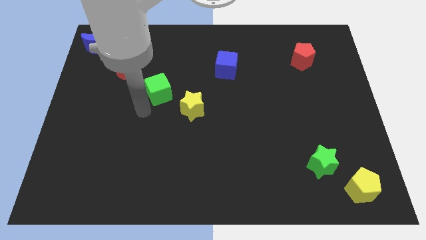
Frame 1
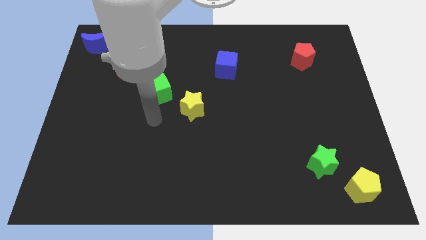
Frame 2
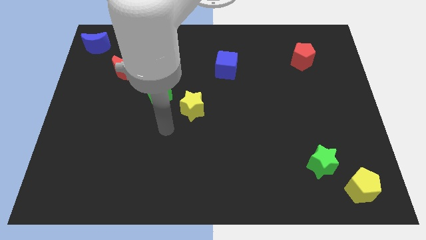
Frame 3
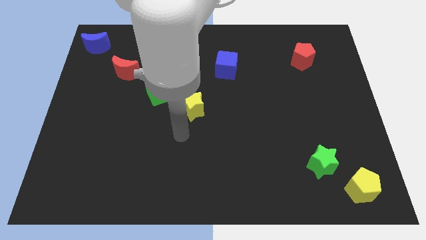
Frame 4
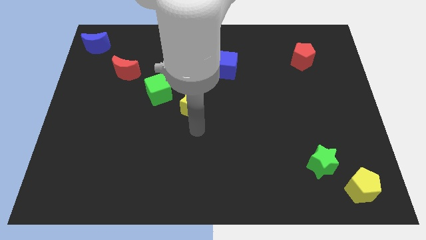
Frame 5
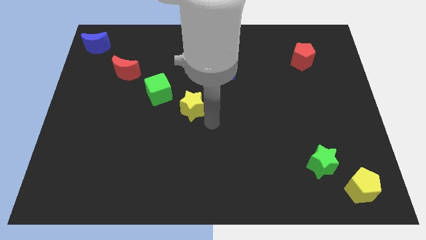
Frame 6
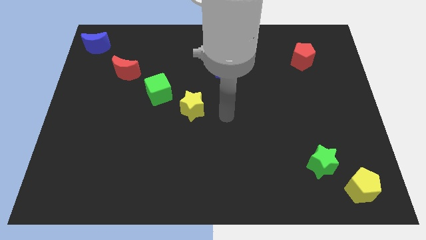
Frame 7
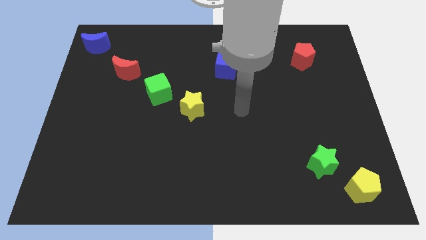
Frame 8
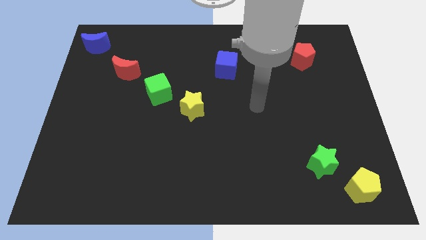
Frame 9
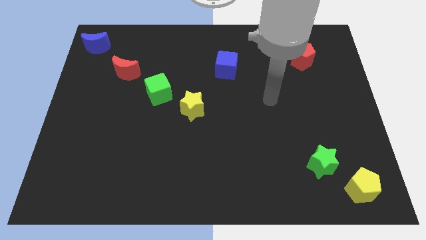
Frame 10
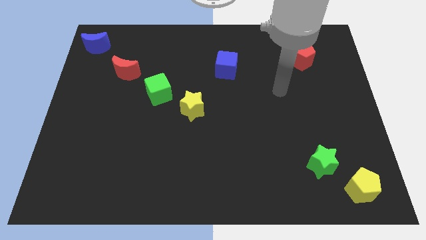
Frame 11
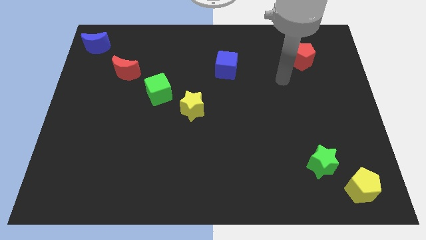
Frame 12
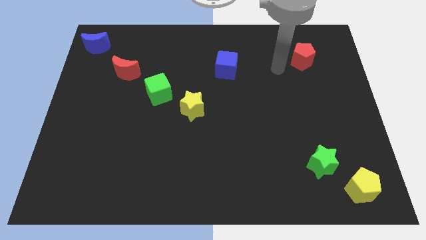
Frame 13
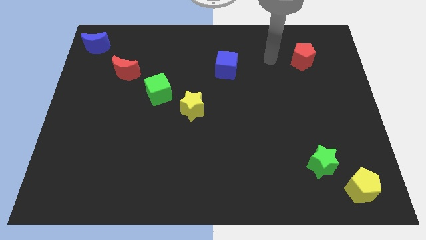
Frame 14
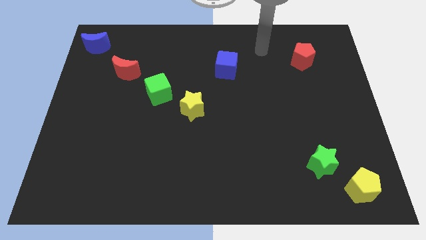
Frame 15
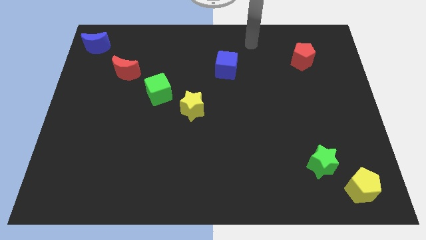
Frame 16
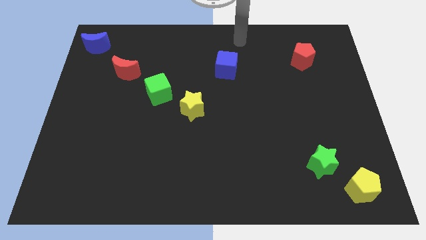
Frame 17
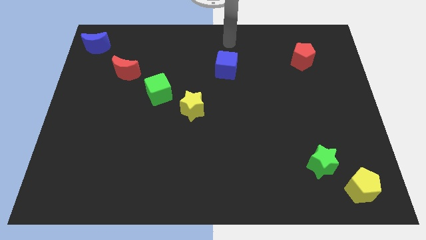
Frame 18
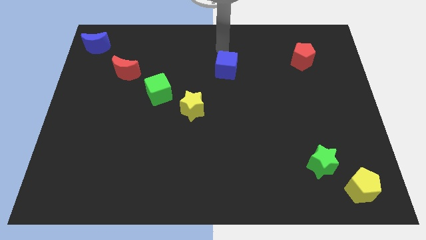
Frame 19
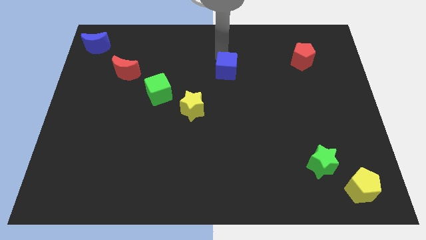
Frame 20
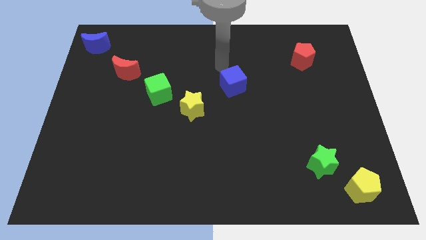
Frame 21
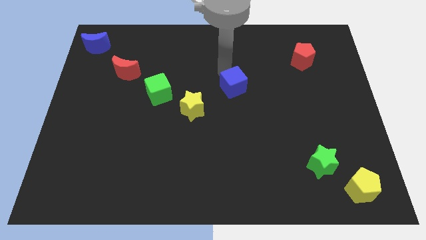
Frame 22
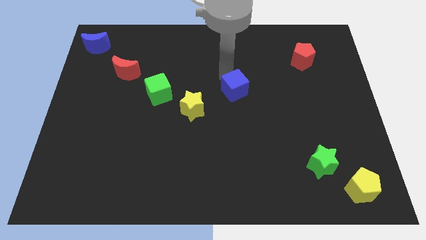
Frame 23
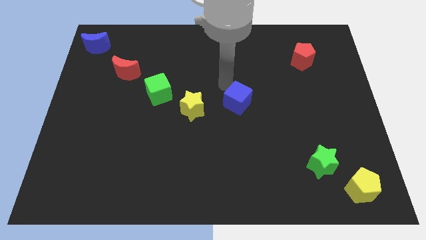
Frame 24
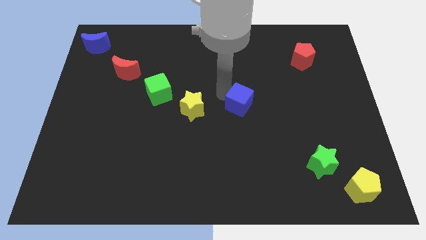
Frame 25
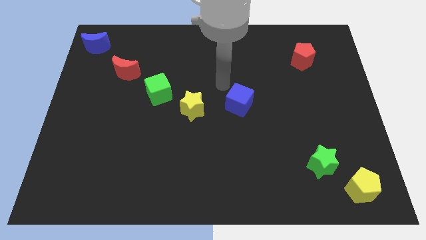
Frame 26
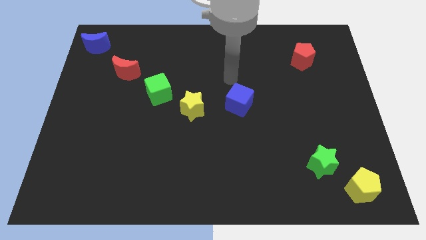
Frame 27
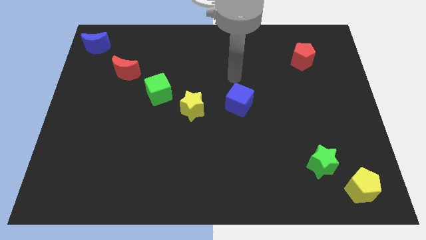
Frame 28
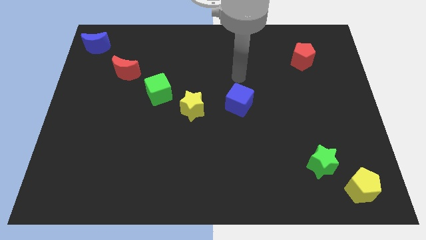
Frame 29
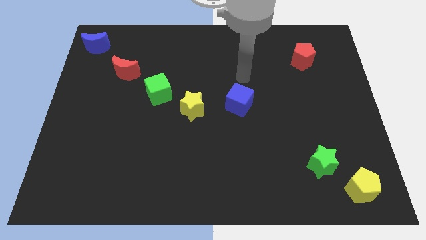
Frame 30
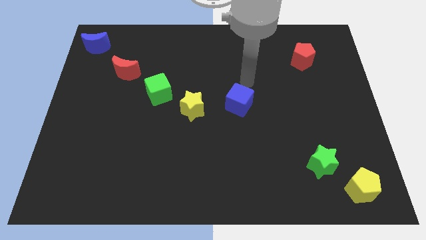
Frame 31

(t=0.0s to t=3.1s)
push blue cube to right of yellow star

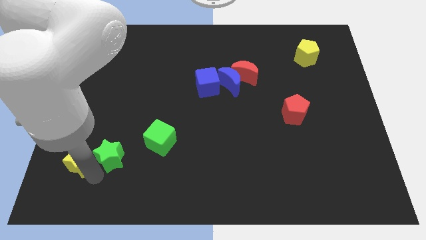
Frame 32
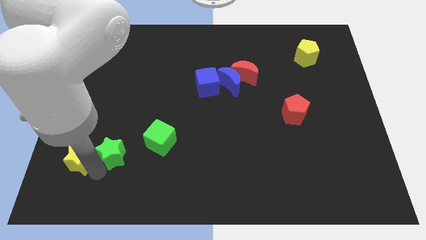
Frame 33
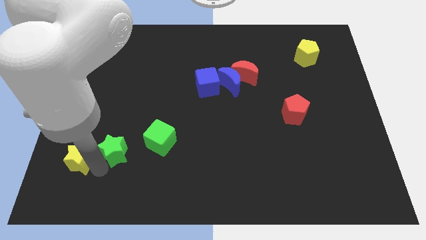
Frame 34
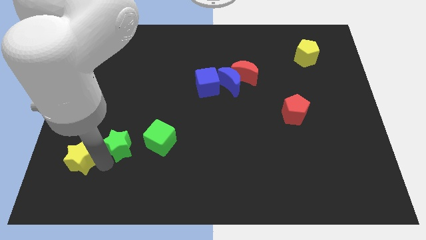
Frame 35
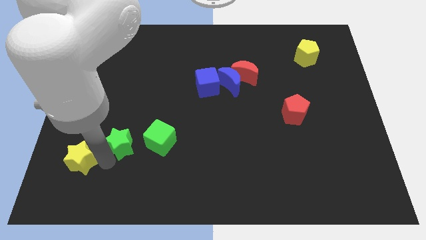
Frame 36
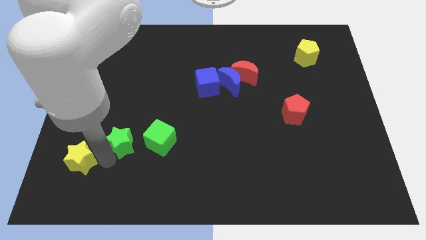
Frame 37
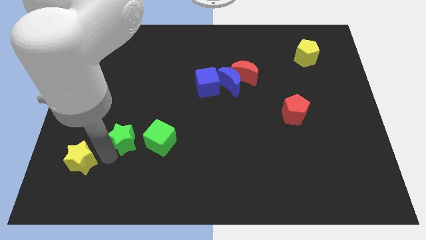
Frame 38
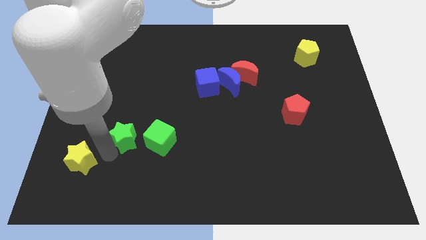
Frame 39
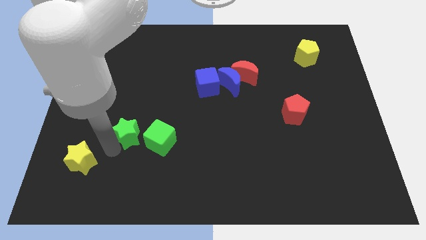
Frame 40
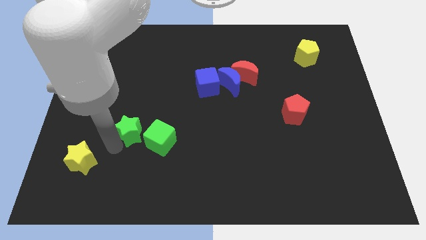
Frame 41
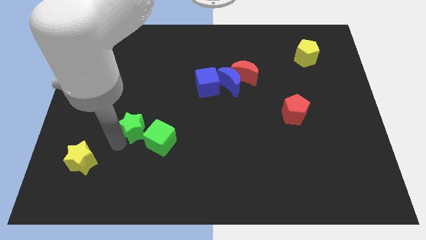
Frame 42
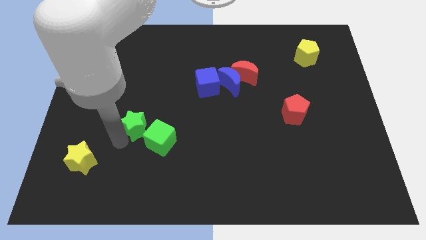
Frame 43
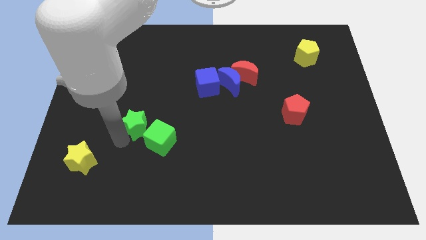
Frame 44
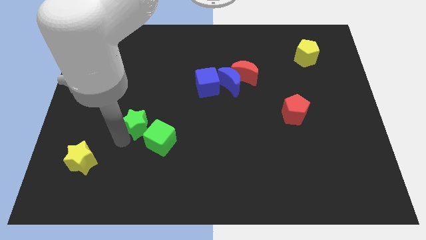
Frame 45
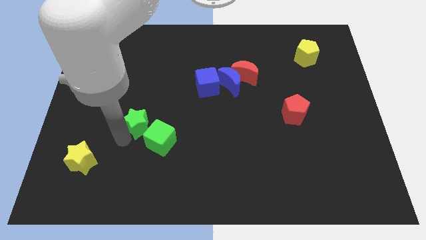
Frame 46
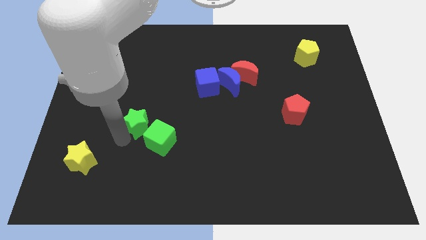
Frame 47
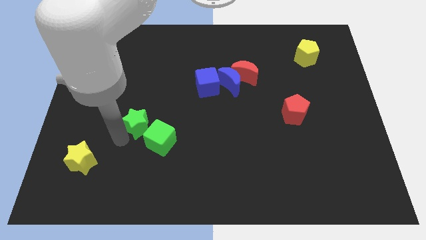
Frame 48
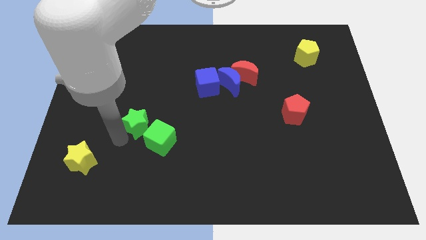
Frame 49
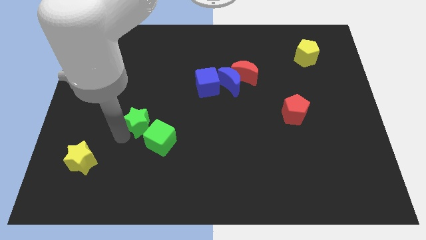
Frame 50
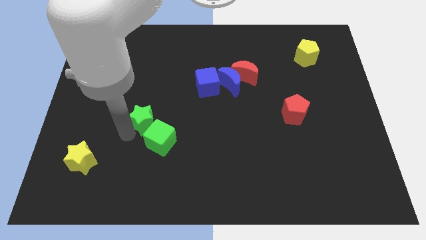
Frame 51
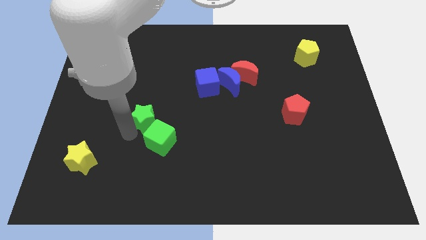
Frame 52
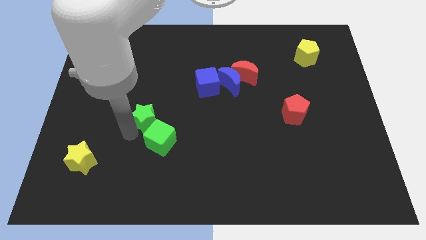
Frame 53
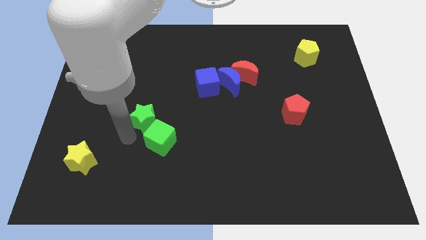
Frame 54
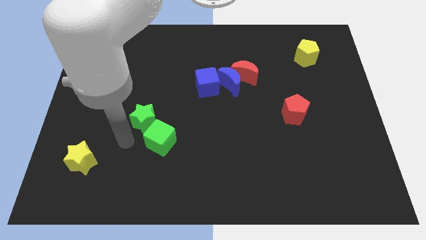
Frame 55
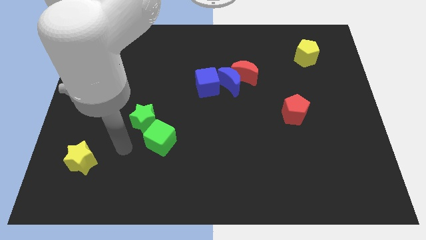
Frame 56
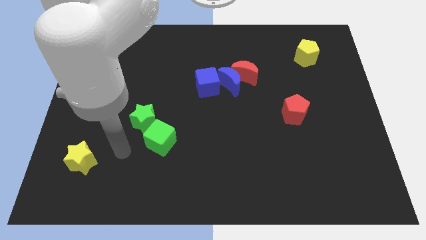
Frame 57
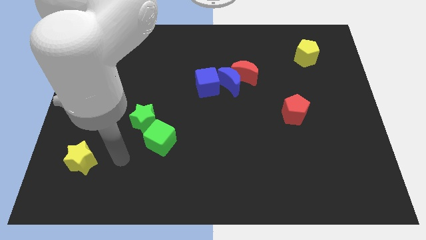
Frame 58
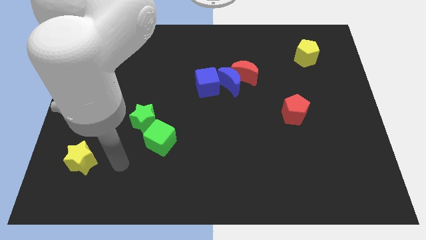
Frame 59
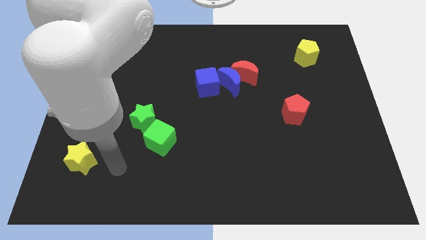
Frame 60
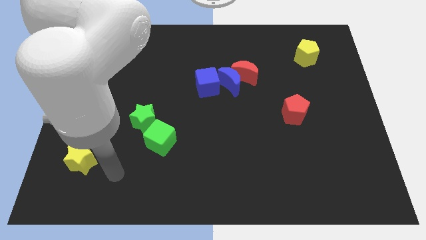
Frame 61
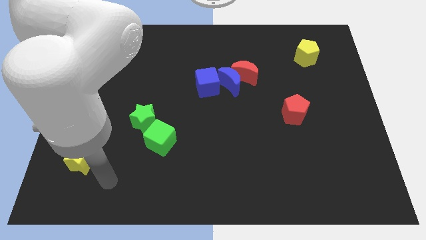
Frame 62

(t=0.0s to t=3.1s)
place the green star to the top left of the green cube

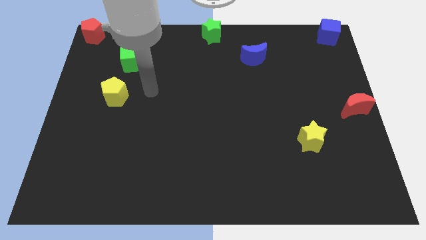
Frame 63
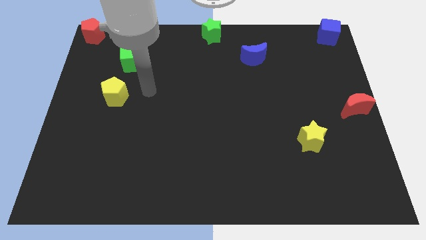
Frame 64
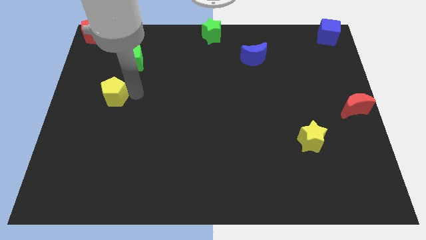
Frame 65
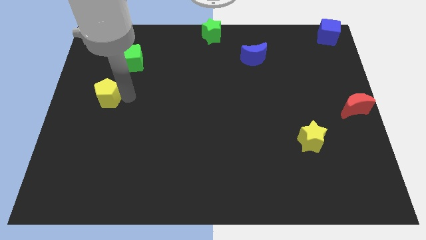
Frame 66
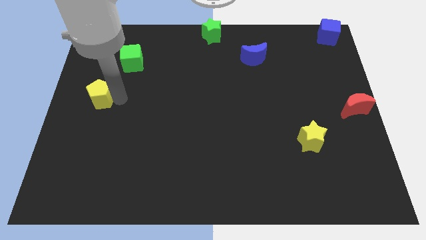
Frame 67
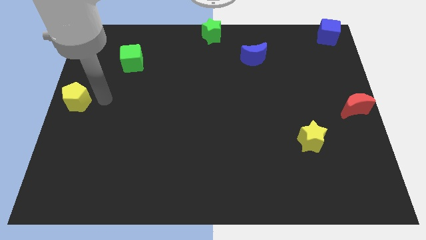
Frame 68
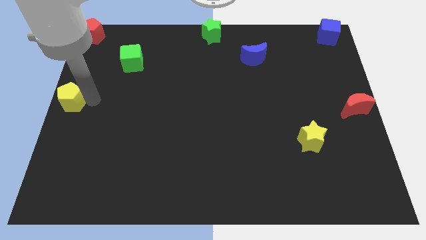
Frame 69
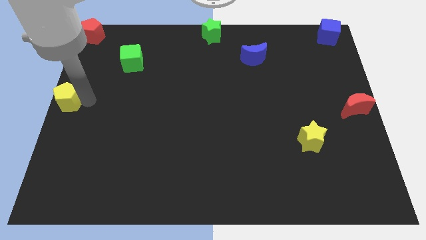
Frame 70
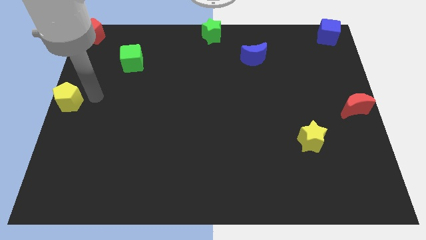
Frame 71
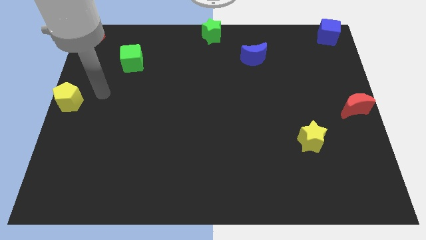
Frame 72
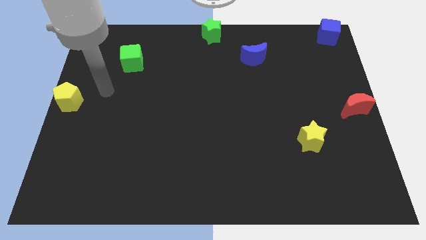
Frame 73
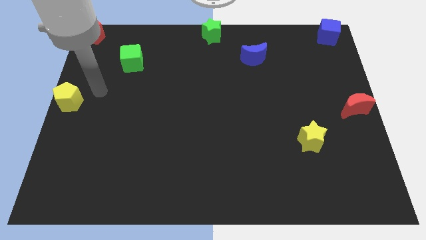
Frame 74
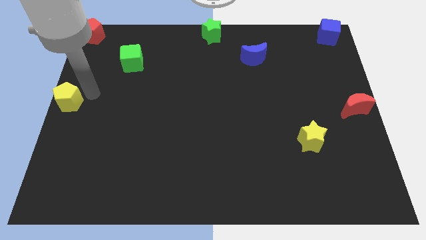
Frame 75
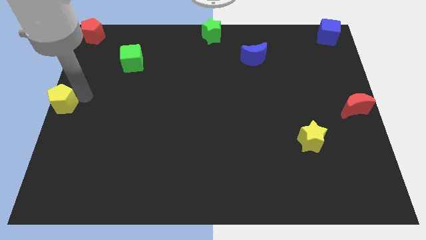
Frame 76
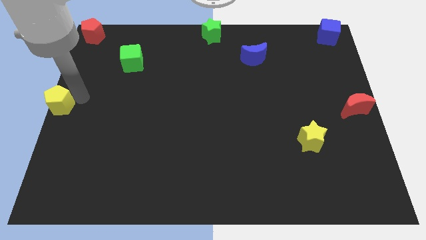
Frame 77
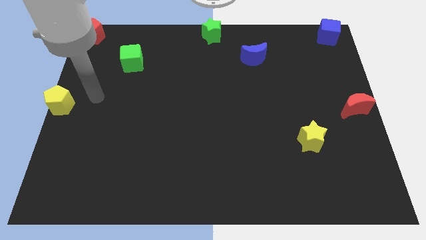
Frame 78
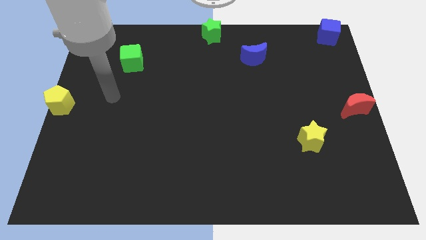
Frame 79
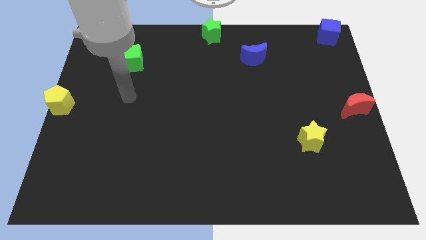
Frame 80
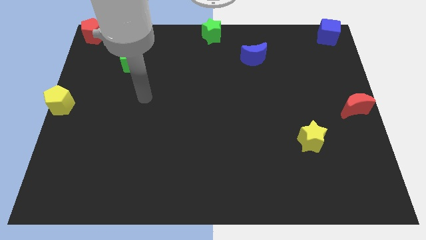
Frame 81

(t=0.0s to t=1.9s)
slide the yellow pentagon to the center left of the board

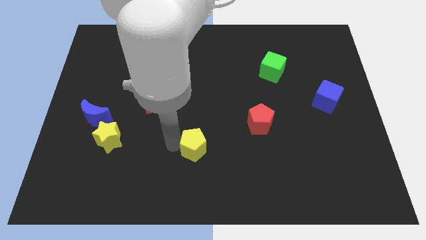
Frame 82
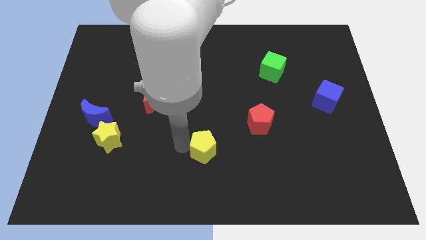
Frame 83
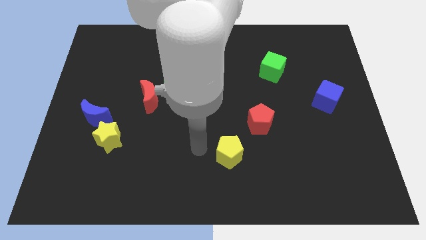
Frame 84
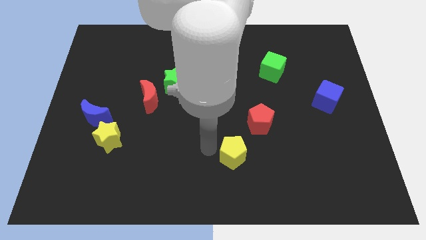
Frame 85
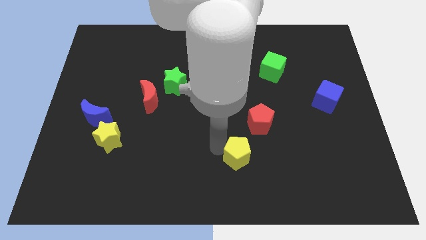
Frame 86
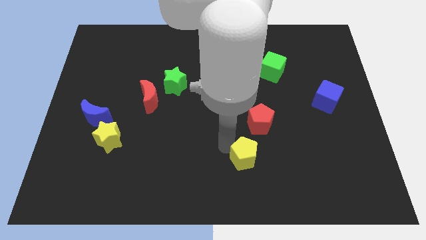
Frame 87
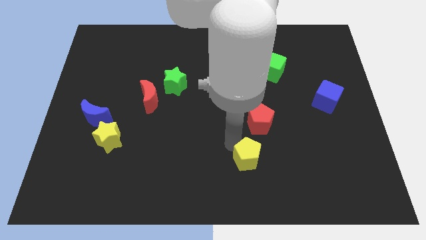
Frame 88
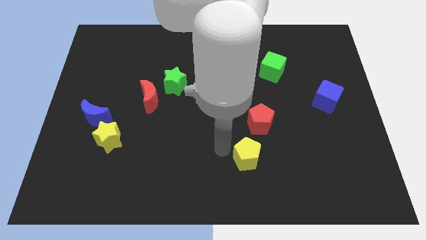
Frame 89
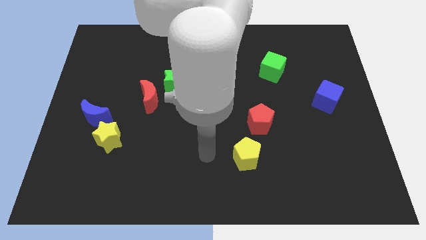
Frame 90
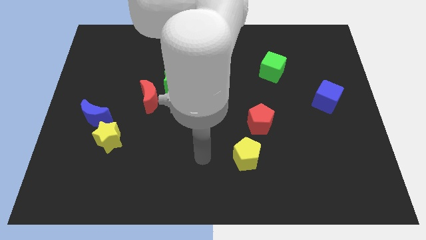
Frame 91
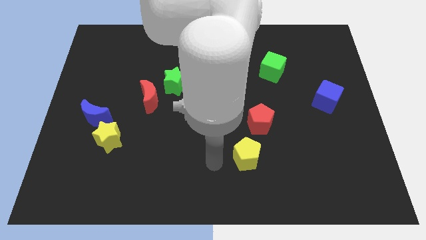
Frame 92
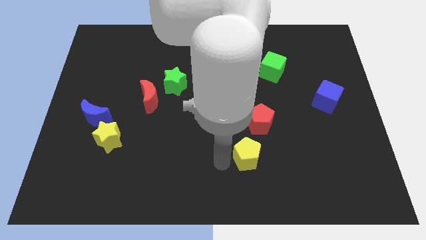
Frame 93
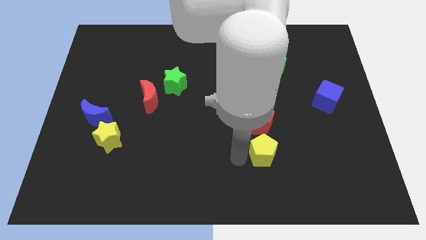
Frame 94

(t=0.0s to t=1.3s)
slide the yellow pentagon below the red pentagon
